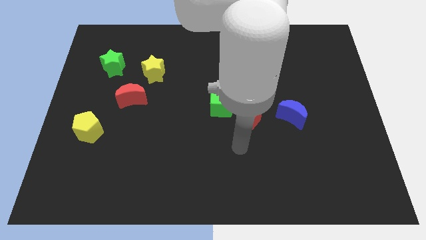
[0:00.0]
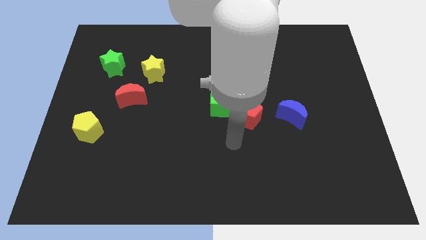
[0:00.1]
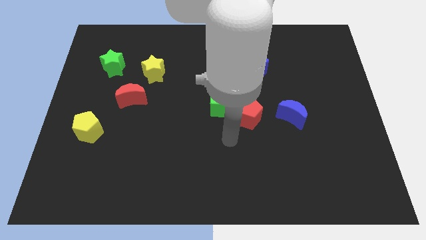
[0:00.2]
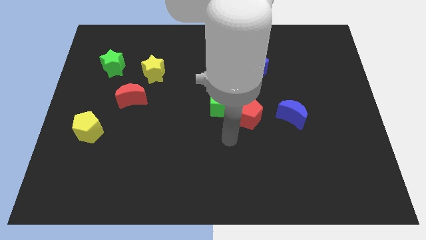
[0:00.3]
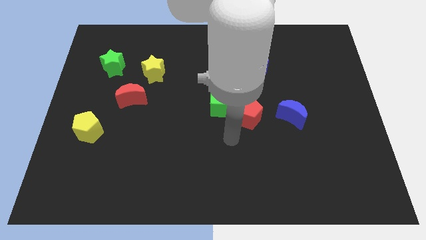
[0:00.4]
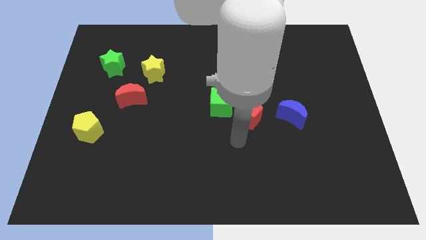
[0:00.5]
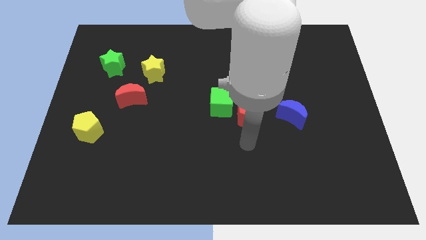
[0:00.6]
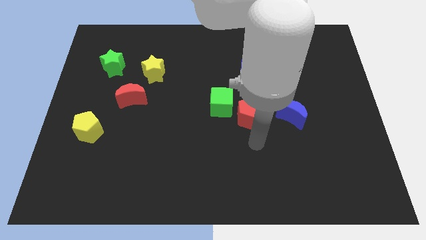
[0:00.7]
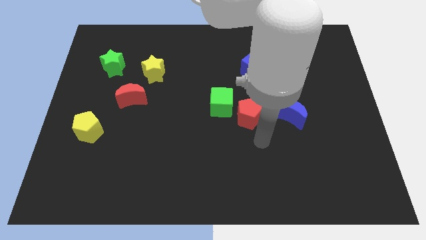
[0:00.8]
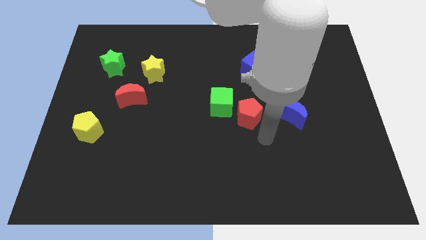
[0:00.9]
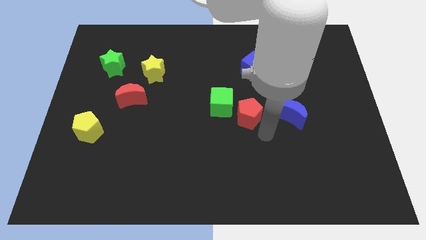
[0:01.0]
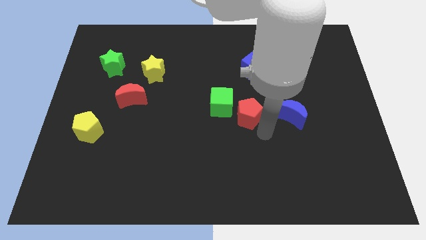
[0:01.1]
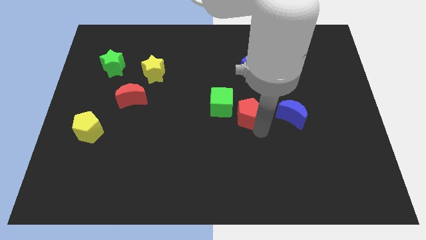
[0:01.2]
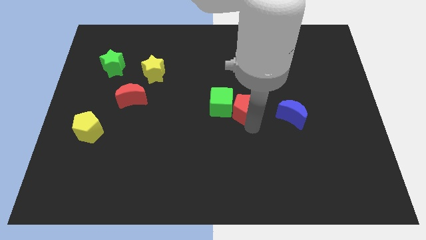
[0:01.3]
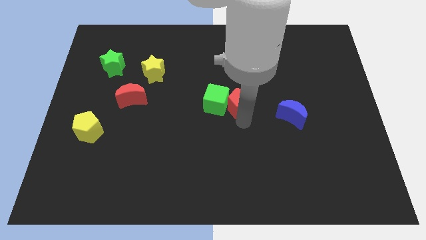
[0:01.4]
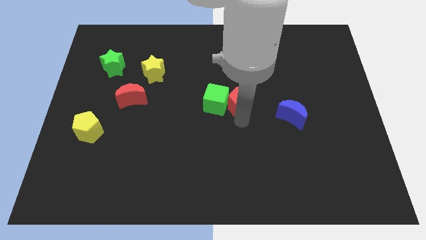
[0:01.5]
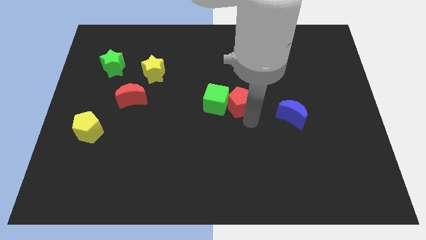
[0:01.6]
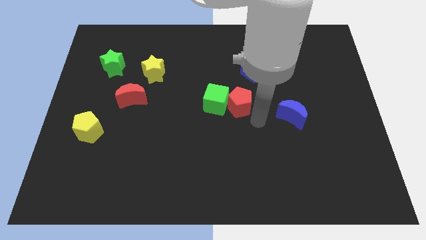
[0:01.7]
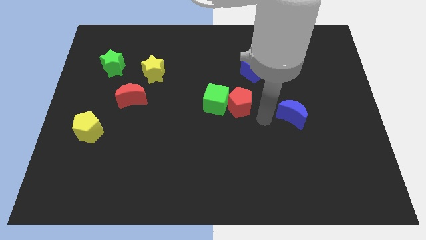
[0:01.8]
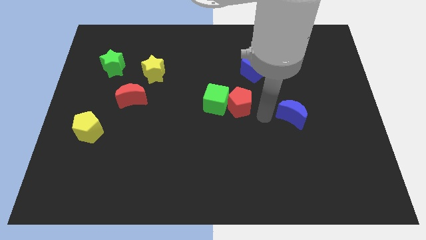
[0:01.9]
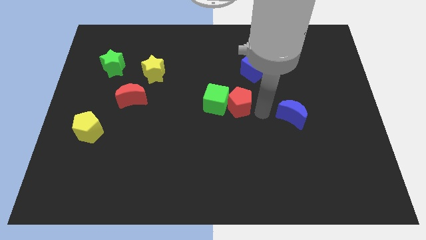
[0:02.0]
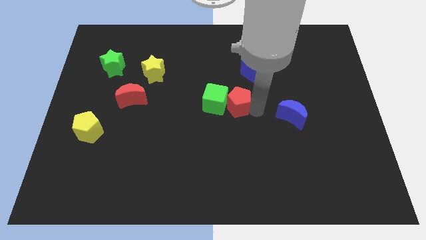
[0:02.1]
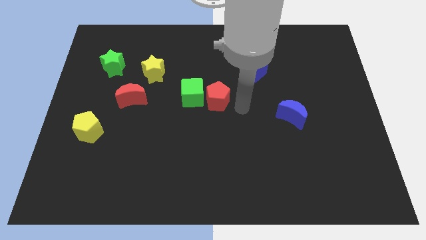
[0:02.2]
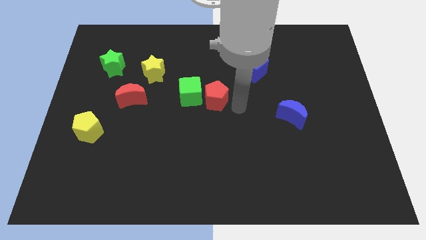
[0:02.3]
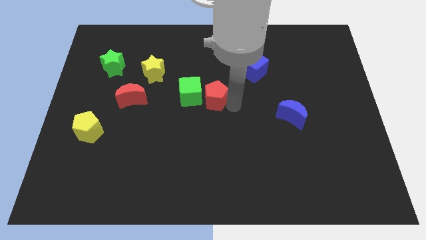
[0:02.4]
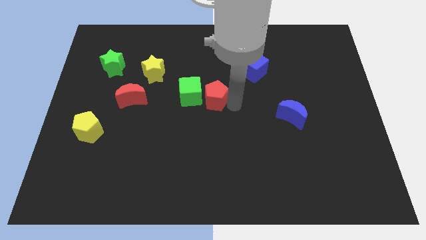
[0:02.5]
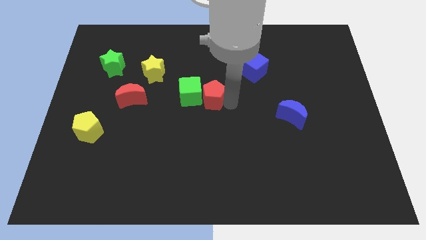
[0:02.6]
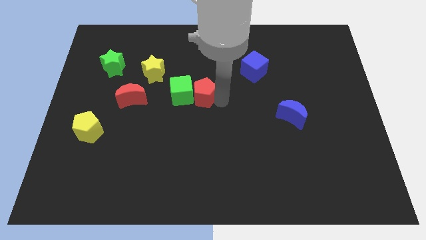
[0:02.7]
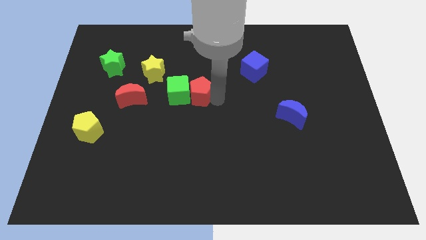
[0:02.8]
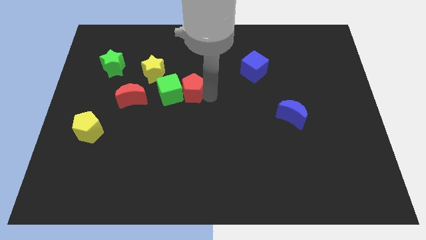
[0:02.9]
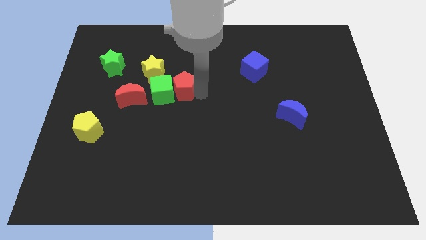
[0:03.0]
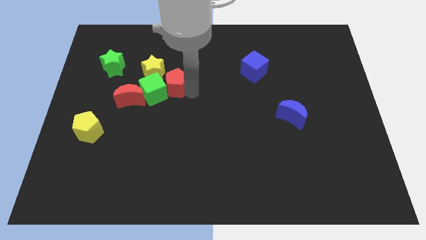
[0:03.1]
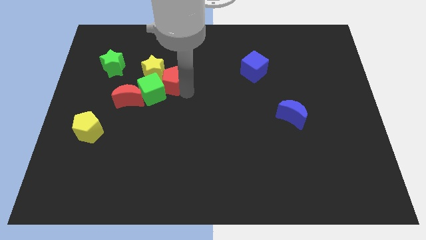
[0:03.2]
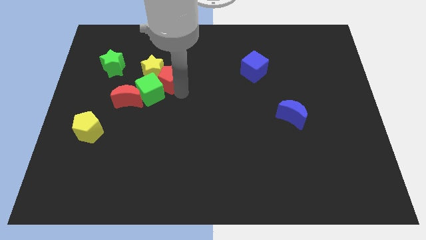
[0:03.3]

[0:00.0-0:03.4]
move the green block and the red pentagon together towards the bottom of the yellow star

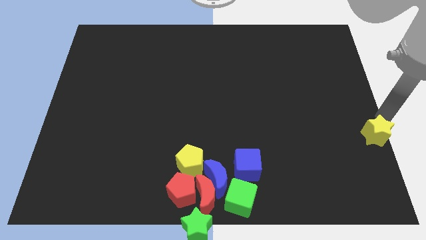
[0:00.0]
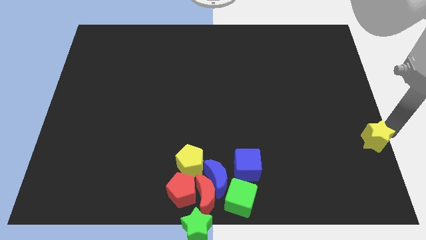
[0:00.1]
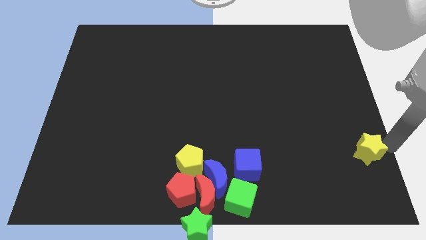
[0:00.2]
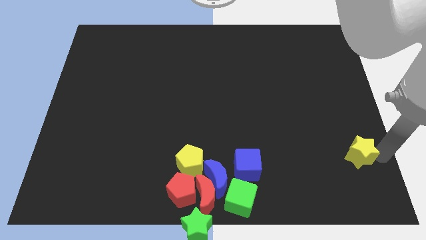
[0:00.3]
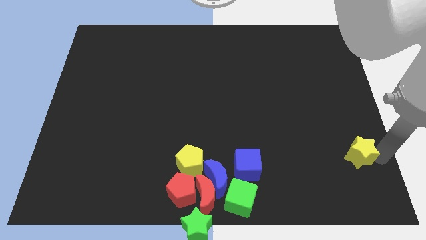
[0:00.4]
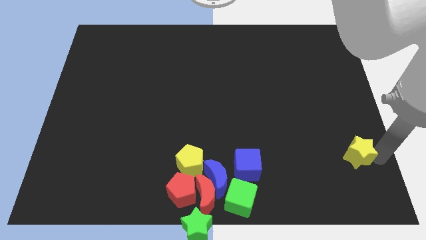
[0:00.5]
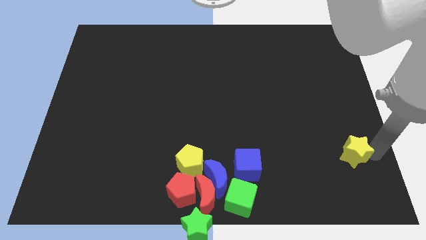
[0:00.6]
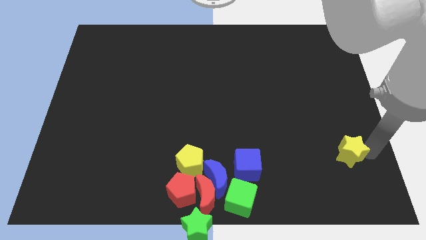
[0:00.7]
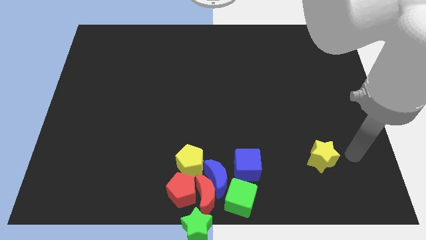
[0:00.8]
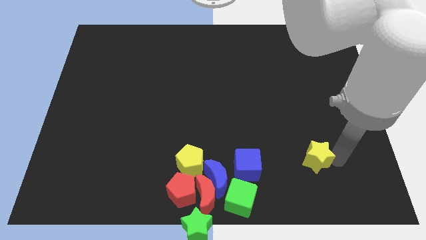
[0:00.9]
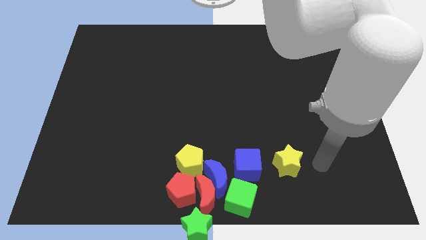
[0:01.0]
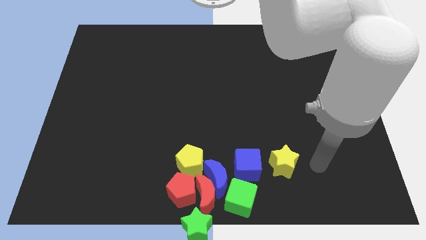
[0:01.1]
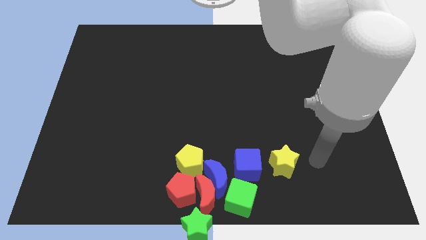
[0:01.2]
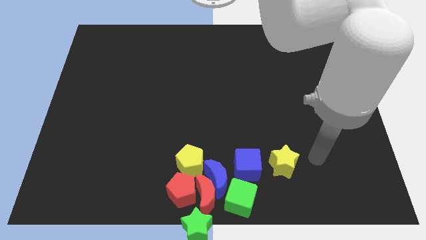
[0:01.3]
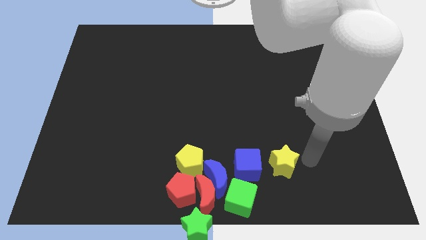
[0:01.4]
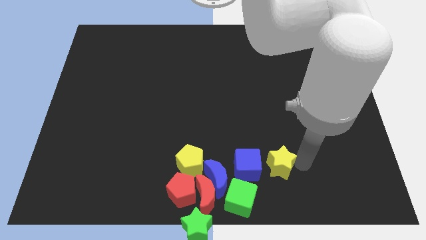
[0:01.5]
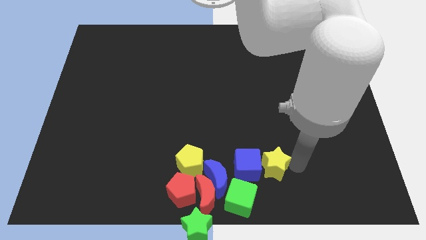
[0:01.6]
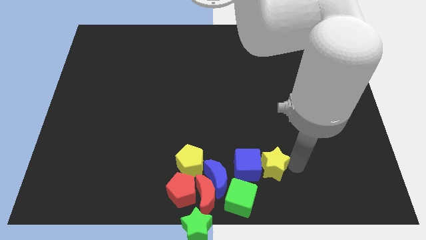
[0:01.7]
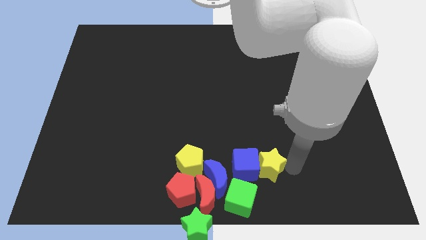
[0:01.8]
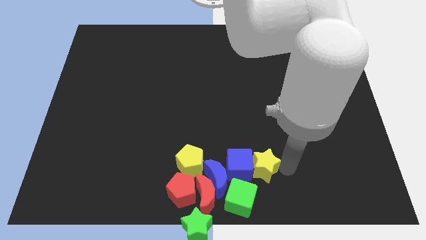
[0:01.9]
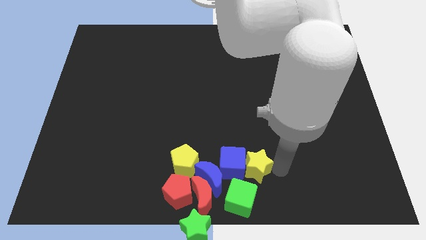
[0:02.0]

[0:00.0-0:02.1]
push the yellow star into the blue cube

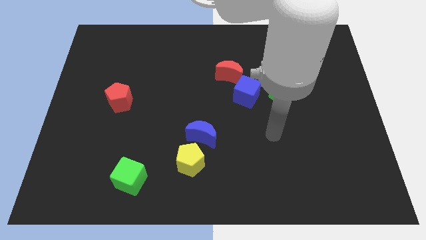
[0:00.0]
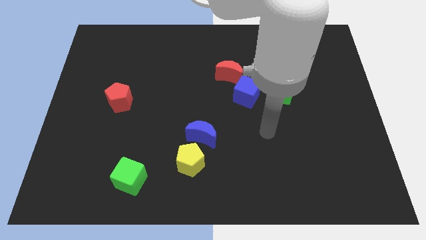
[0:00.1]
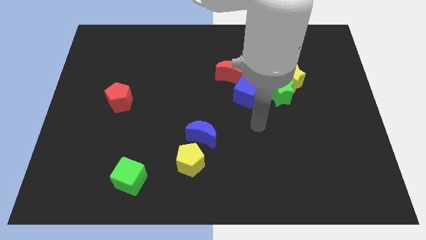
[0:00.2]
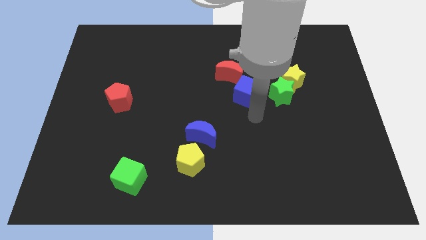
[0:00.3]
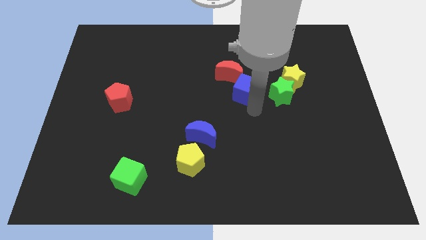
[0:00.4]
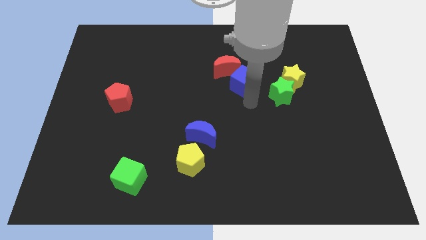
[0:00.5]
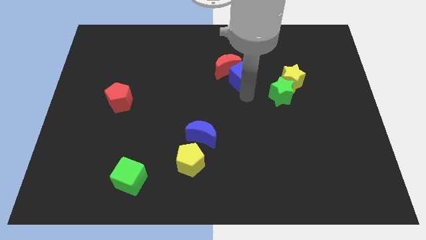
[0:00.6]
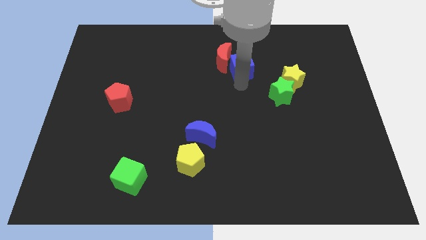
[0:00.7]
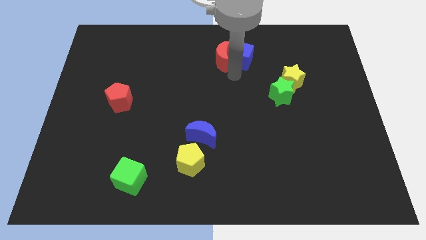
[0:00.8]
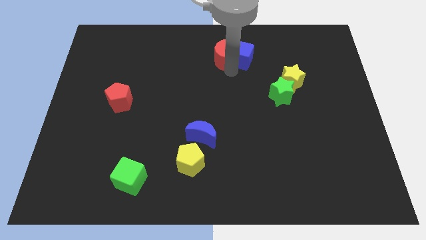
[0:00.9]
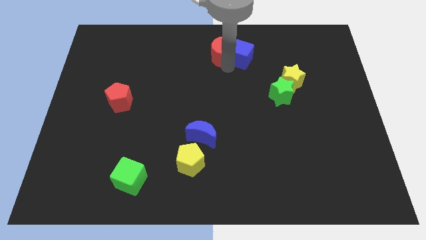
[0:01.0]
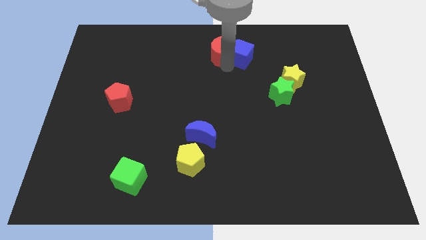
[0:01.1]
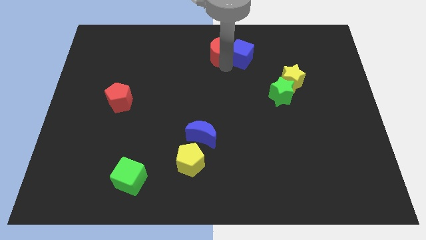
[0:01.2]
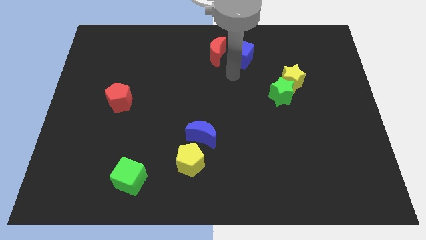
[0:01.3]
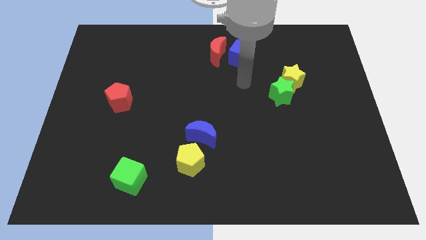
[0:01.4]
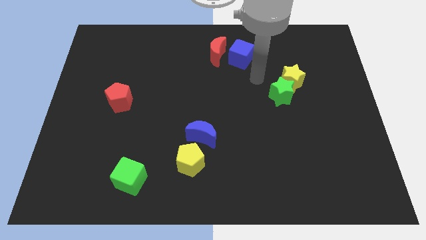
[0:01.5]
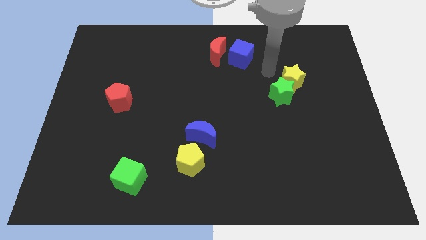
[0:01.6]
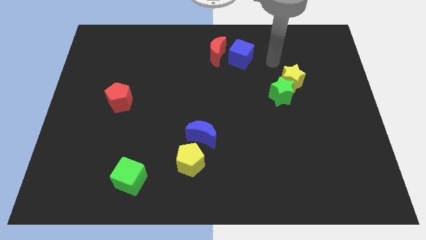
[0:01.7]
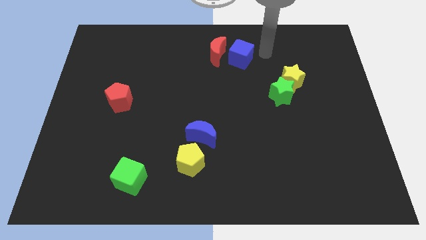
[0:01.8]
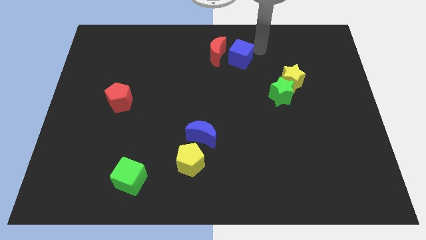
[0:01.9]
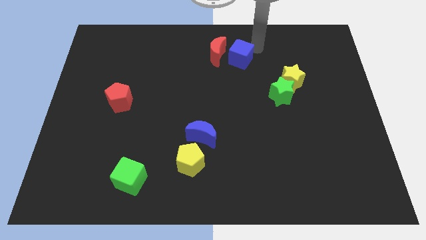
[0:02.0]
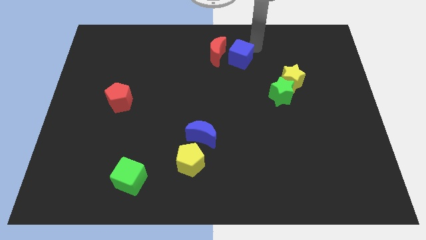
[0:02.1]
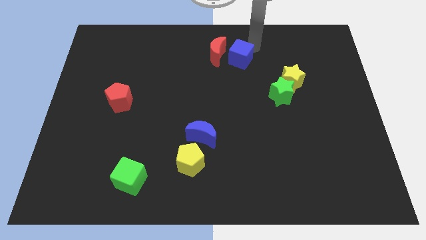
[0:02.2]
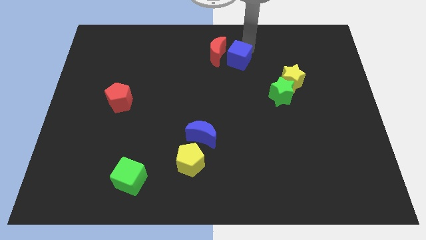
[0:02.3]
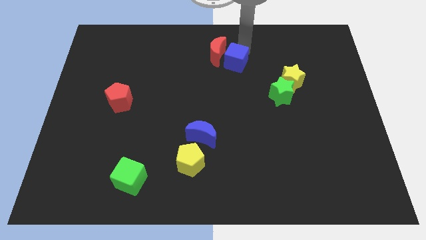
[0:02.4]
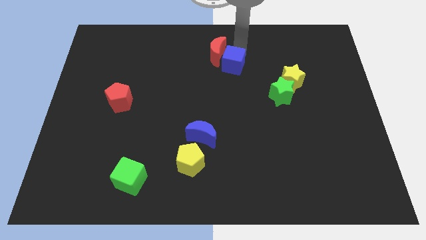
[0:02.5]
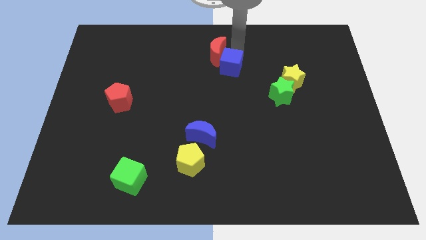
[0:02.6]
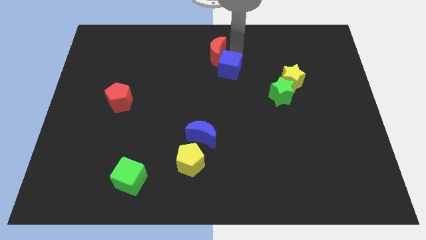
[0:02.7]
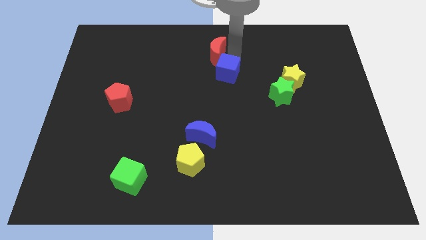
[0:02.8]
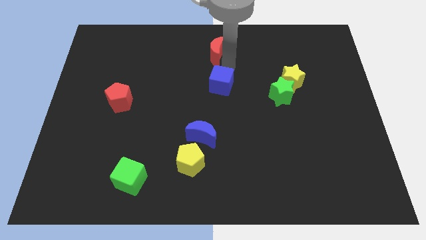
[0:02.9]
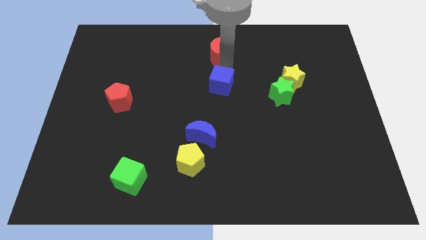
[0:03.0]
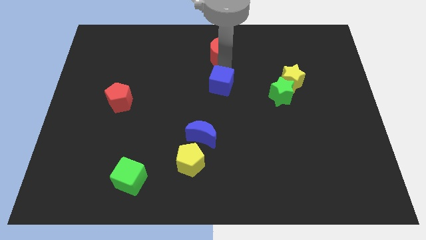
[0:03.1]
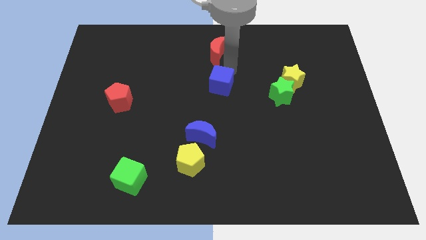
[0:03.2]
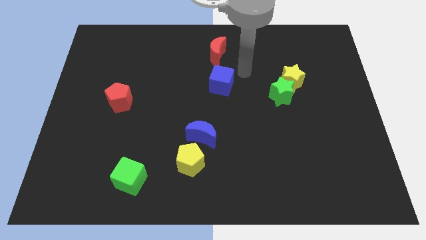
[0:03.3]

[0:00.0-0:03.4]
move the blue cube along with the red crescent to the top

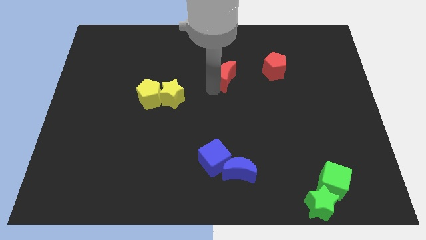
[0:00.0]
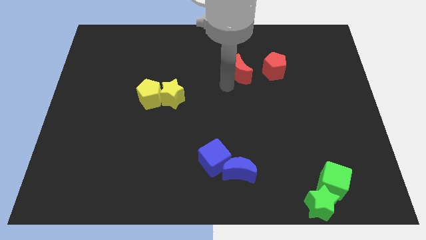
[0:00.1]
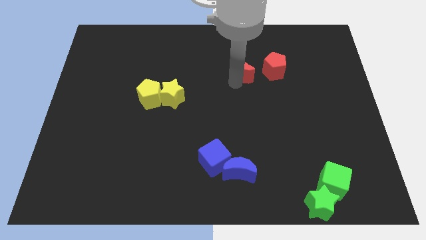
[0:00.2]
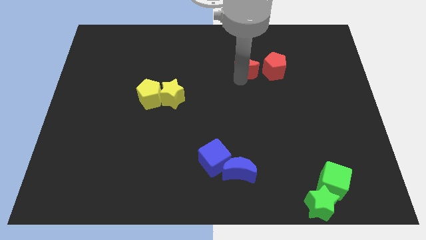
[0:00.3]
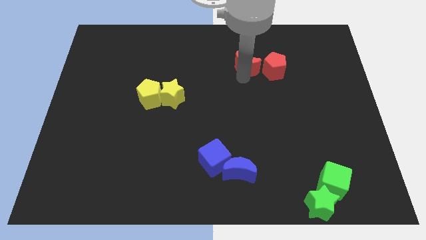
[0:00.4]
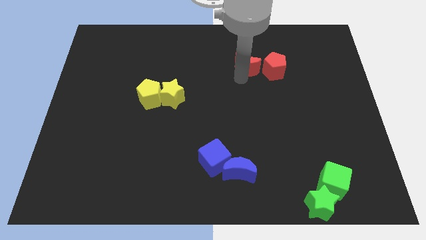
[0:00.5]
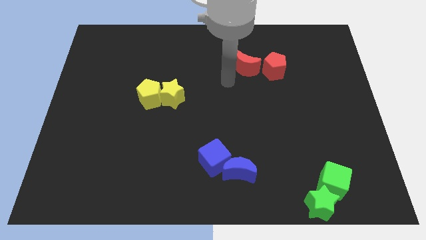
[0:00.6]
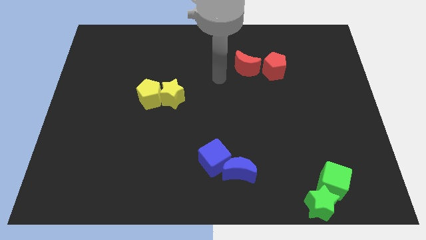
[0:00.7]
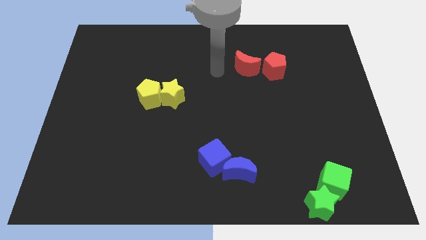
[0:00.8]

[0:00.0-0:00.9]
move the red crescent left to the red pentagon
